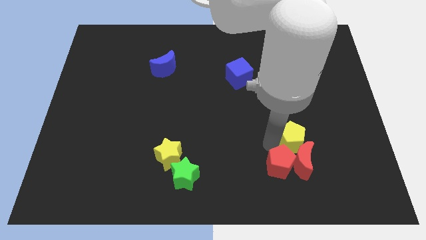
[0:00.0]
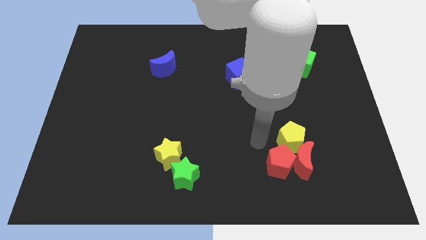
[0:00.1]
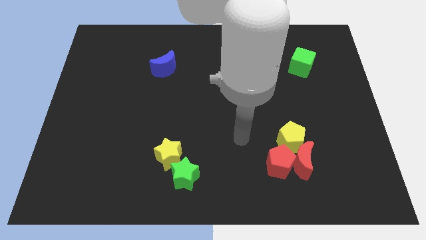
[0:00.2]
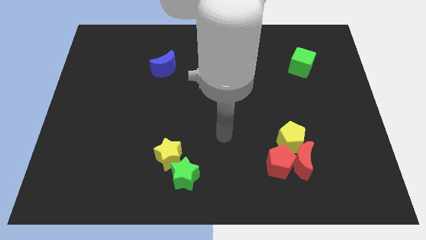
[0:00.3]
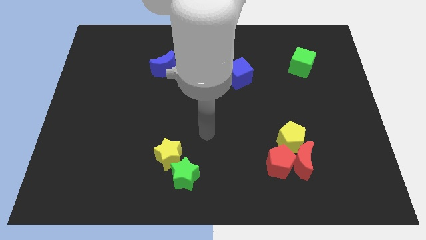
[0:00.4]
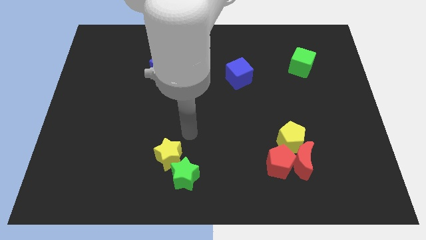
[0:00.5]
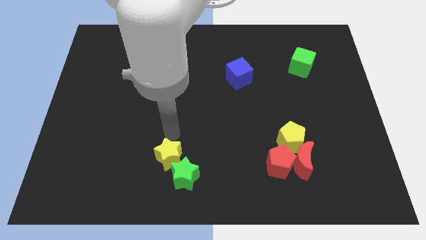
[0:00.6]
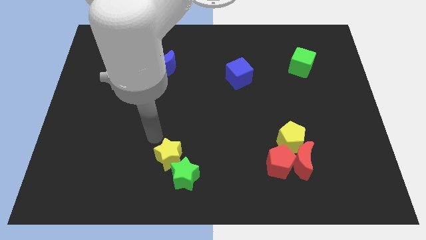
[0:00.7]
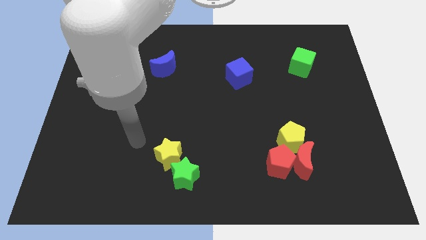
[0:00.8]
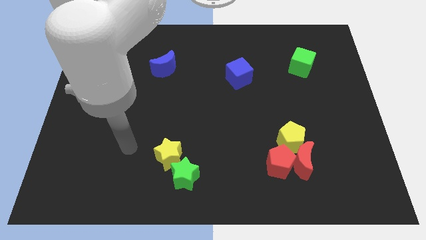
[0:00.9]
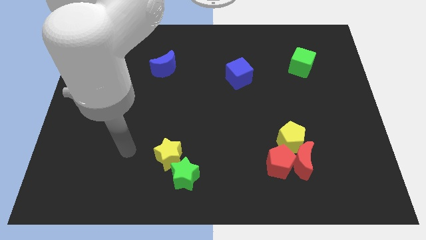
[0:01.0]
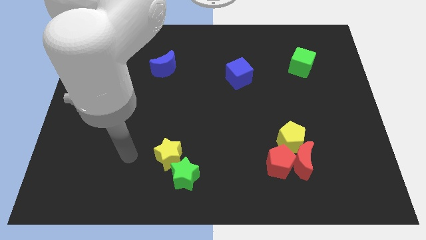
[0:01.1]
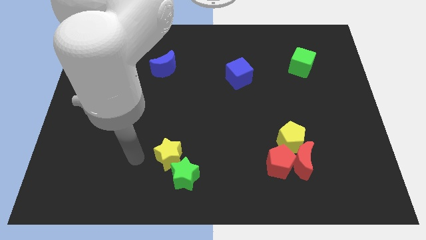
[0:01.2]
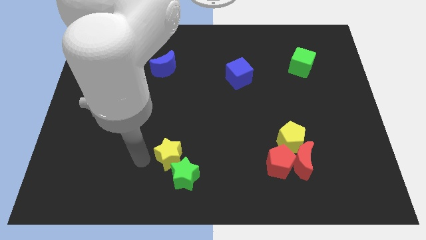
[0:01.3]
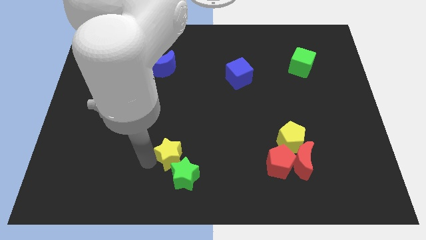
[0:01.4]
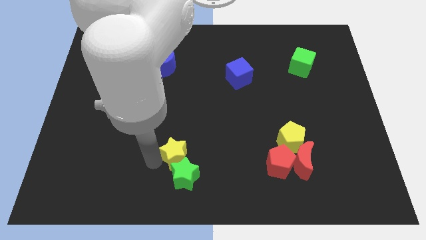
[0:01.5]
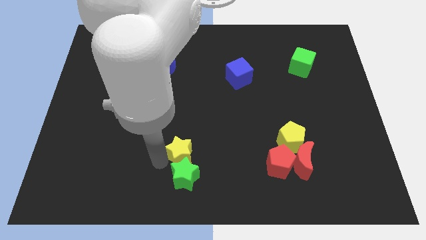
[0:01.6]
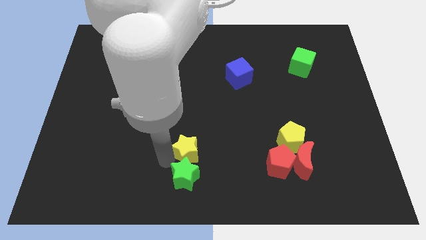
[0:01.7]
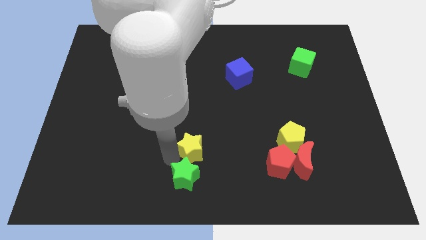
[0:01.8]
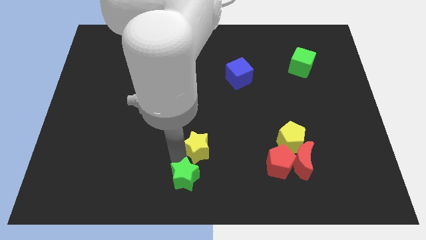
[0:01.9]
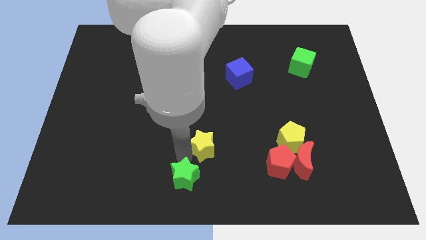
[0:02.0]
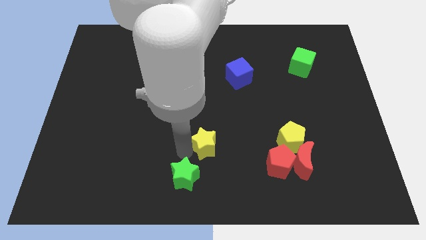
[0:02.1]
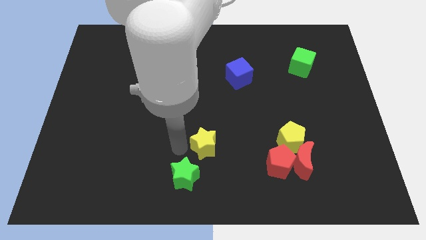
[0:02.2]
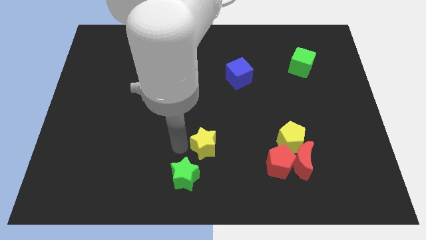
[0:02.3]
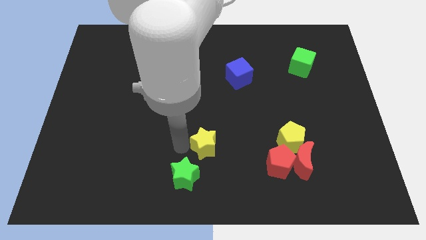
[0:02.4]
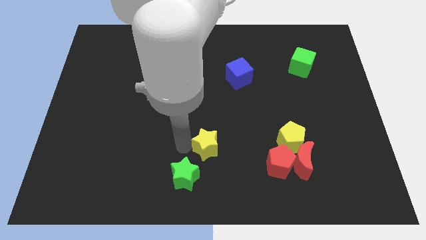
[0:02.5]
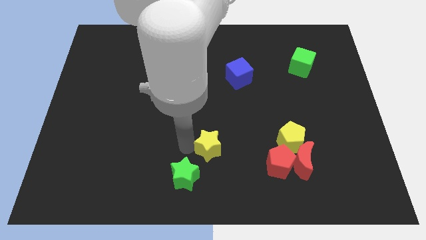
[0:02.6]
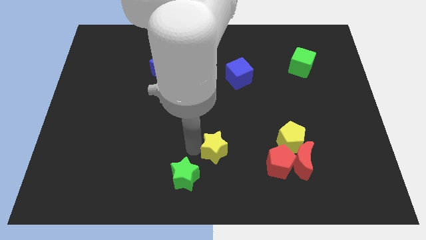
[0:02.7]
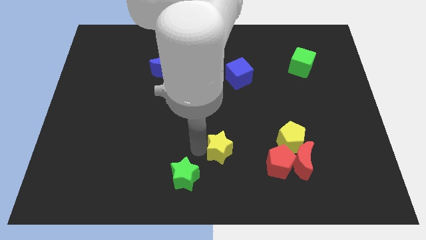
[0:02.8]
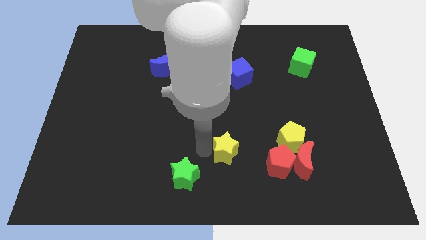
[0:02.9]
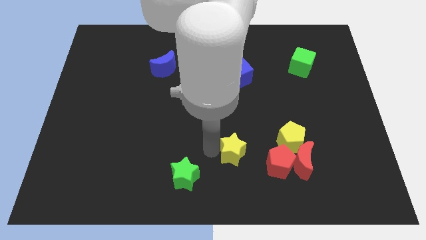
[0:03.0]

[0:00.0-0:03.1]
move the yellow star to the top right of the green star

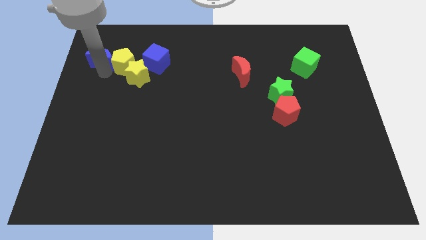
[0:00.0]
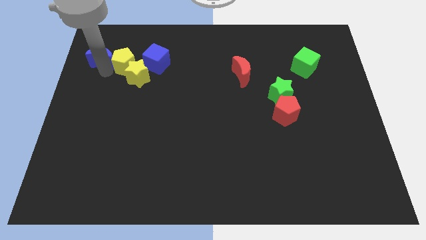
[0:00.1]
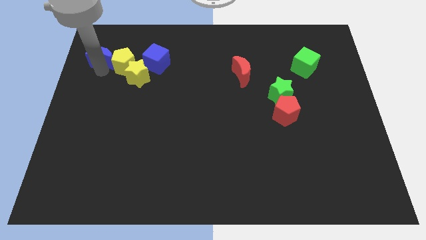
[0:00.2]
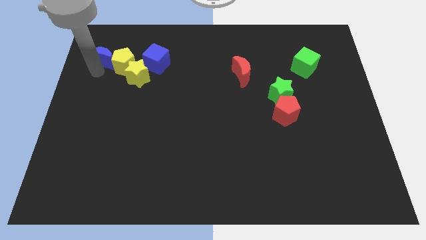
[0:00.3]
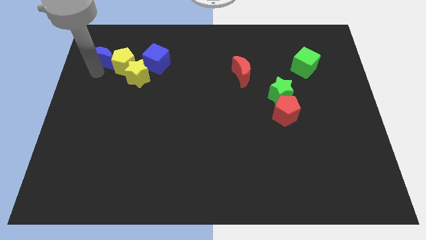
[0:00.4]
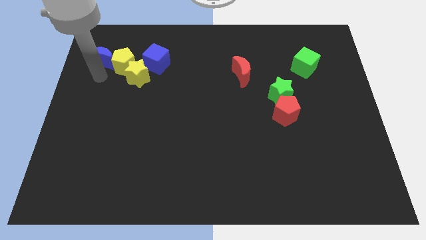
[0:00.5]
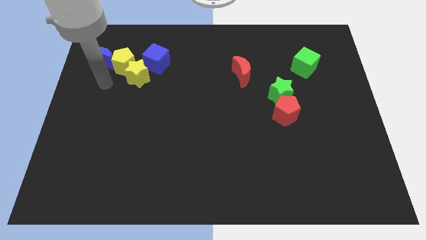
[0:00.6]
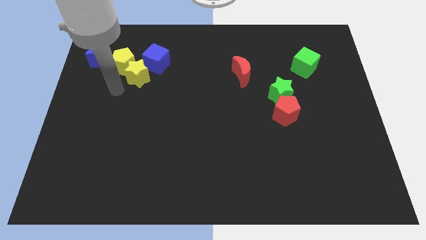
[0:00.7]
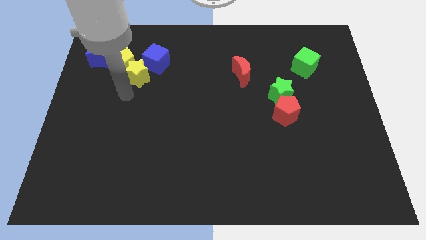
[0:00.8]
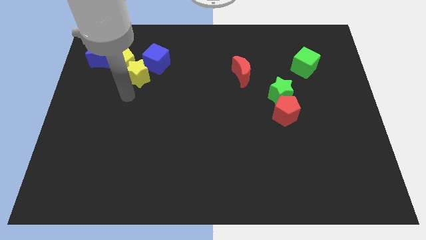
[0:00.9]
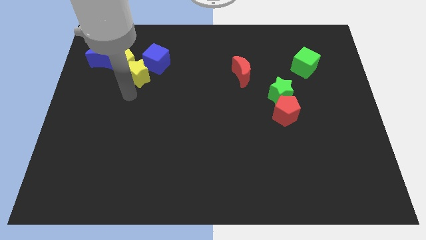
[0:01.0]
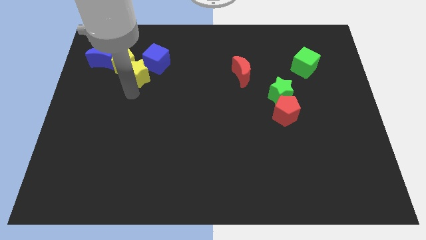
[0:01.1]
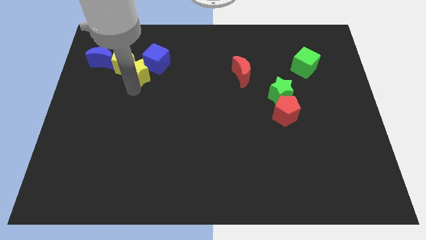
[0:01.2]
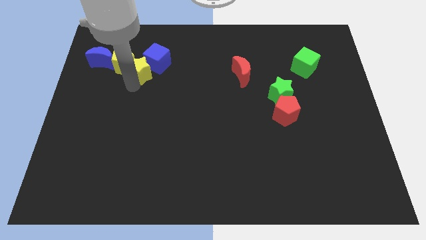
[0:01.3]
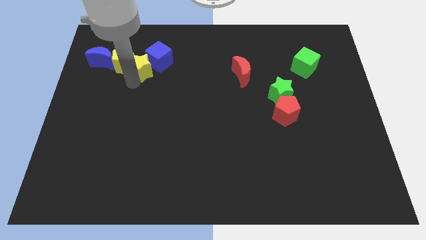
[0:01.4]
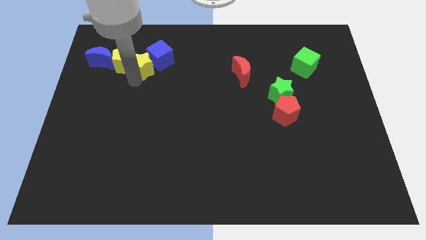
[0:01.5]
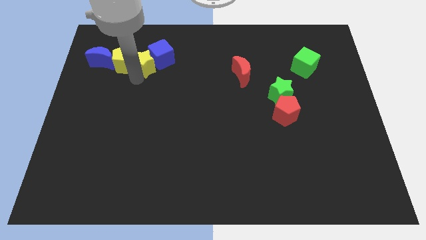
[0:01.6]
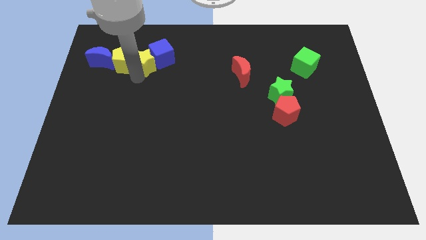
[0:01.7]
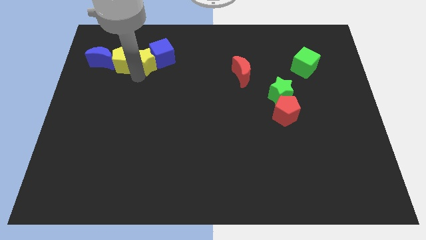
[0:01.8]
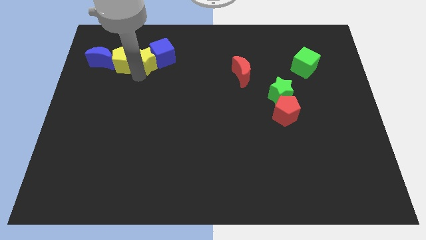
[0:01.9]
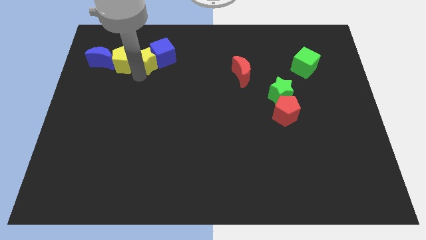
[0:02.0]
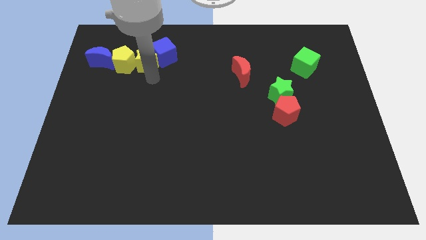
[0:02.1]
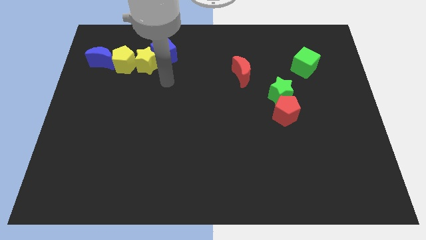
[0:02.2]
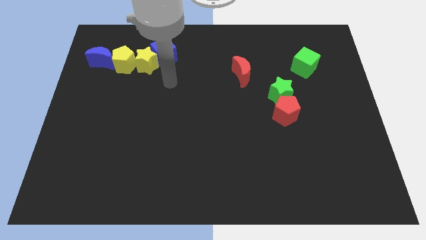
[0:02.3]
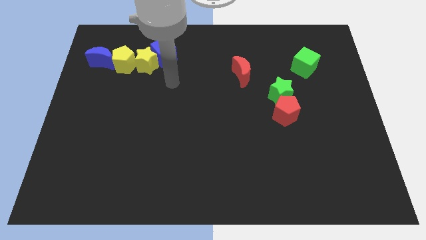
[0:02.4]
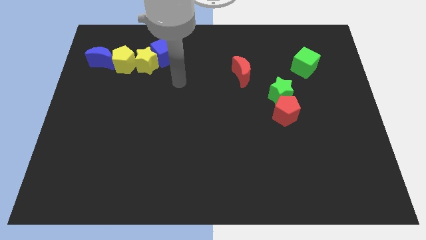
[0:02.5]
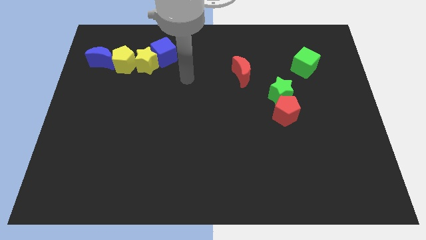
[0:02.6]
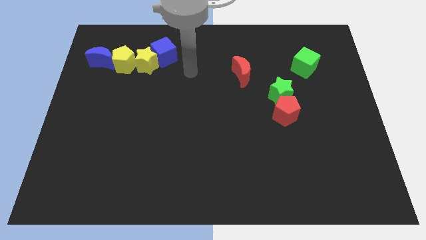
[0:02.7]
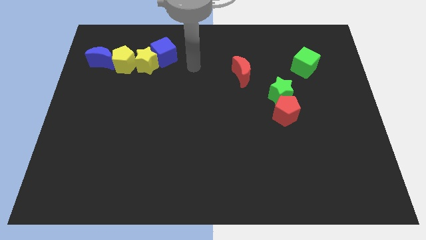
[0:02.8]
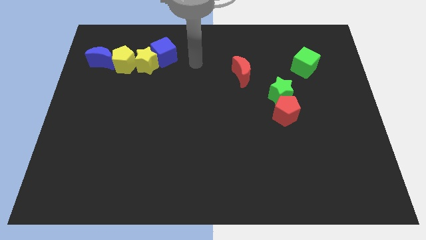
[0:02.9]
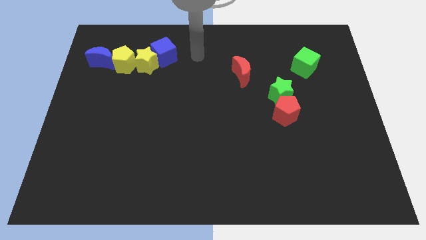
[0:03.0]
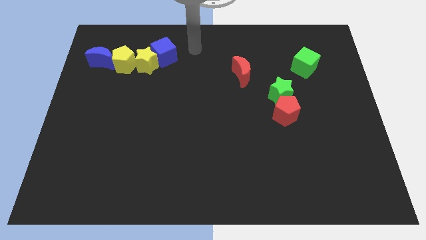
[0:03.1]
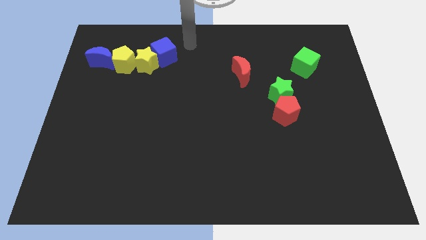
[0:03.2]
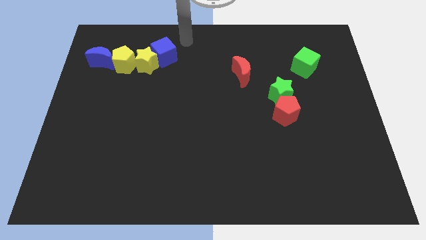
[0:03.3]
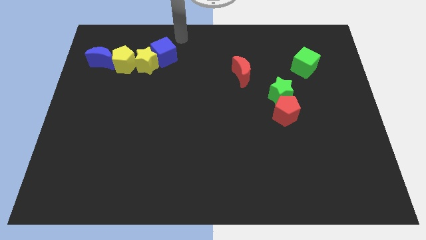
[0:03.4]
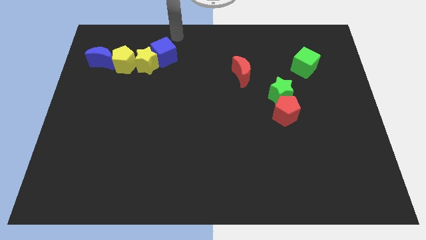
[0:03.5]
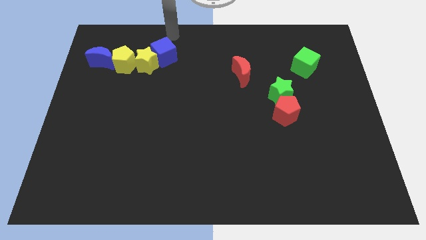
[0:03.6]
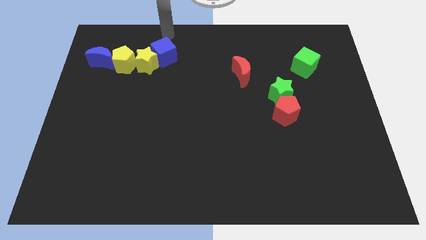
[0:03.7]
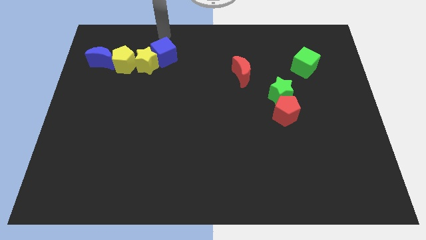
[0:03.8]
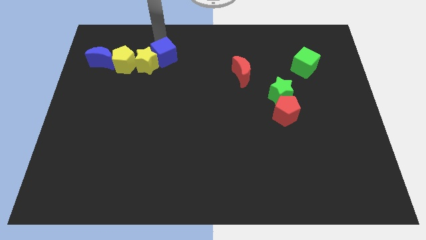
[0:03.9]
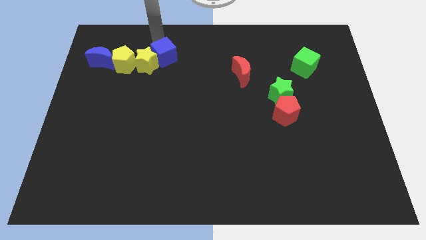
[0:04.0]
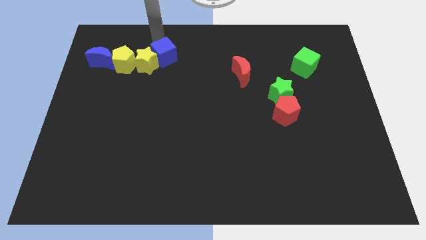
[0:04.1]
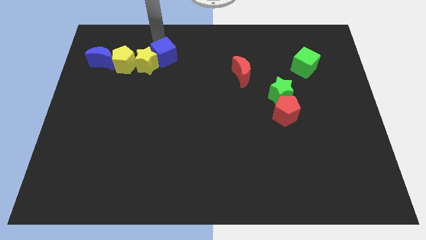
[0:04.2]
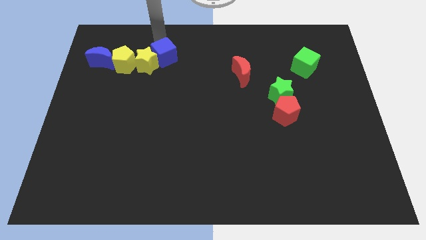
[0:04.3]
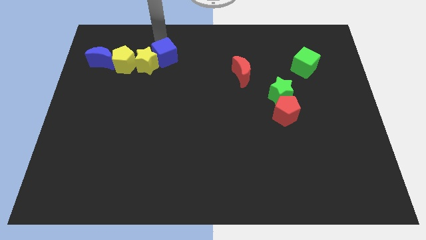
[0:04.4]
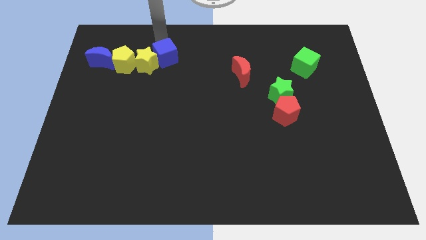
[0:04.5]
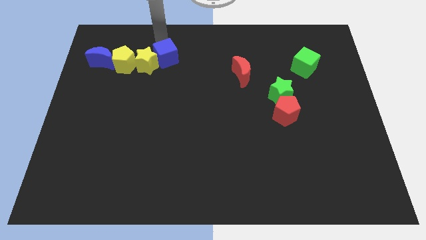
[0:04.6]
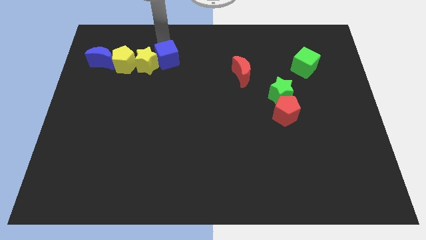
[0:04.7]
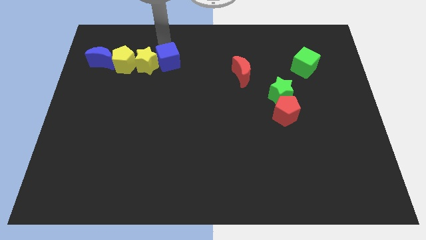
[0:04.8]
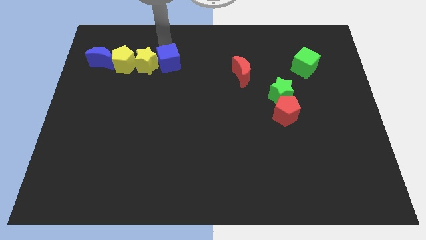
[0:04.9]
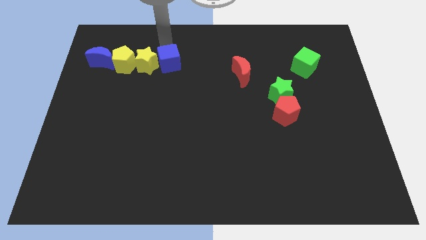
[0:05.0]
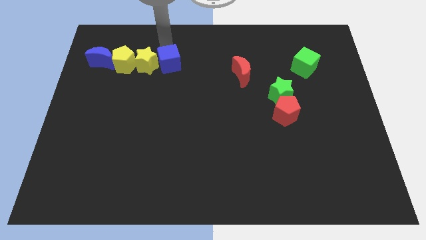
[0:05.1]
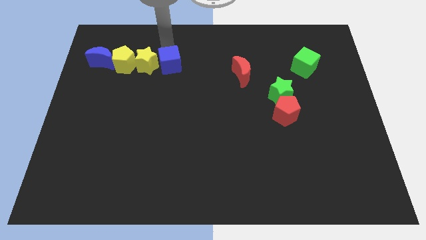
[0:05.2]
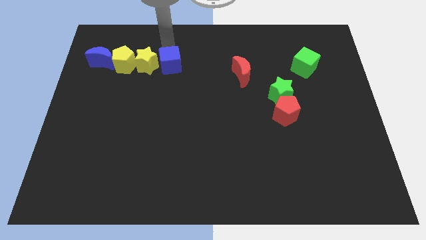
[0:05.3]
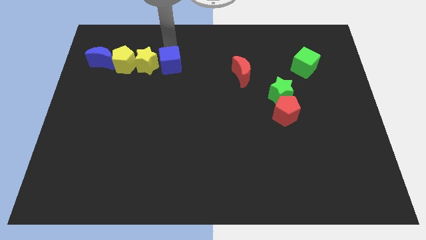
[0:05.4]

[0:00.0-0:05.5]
adjust the blue cube horizontal to the yellow blocks

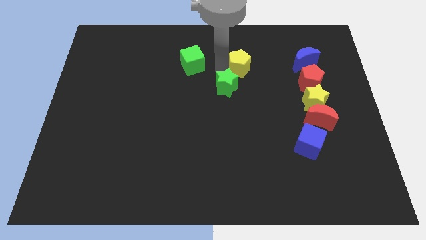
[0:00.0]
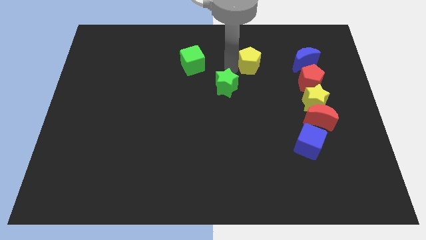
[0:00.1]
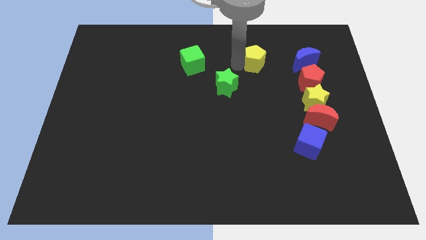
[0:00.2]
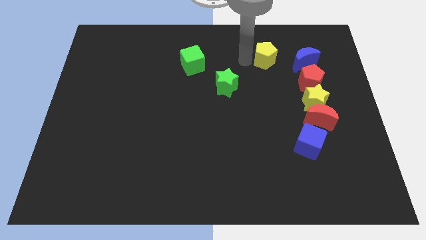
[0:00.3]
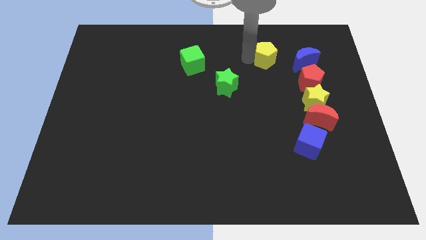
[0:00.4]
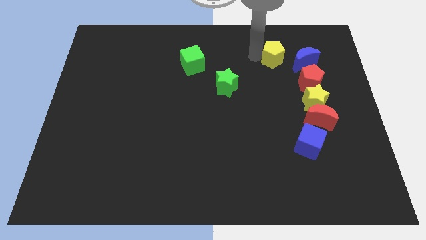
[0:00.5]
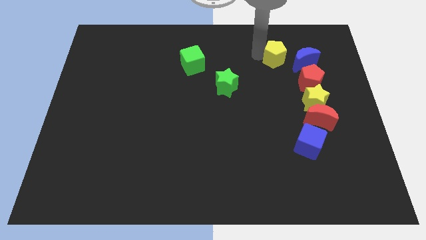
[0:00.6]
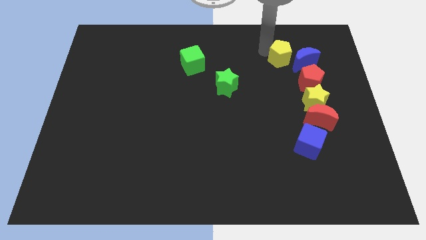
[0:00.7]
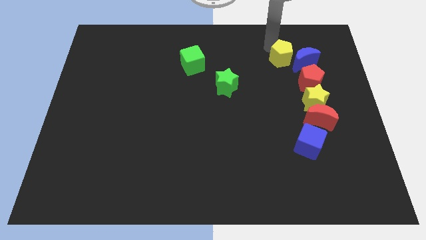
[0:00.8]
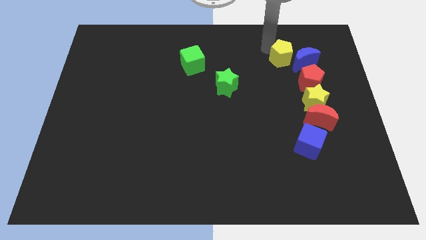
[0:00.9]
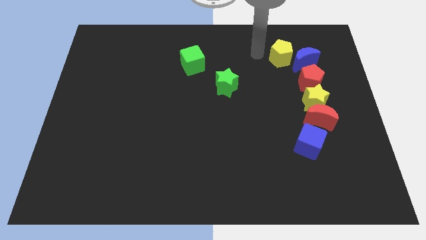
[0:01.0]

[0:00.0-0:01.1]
separate yellow pentagon from green star
